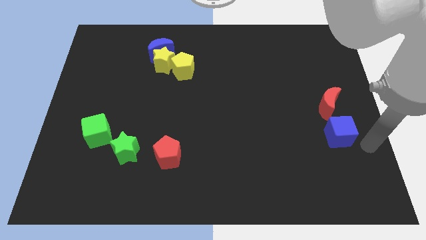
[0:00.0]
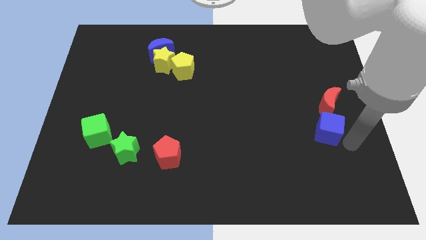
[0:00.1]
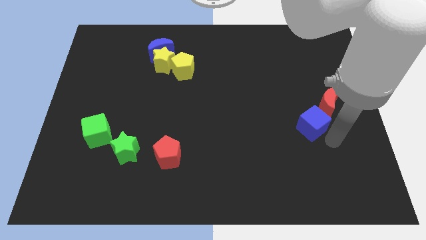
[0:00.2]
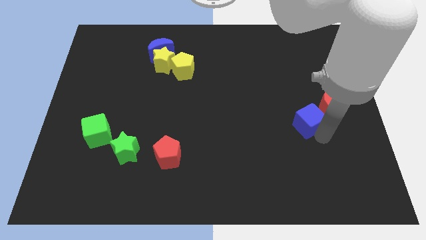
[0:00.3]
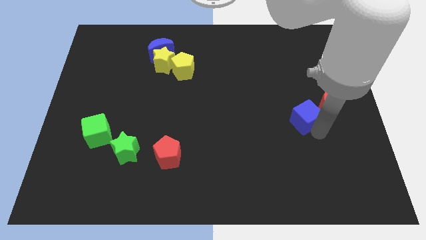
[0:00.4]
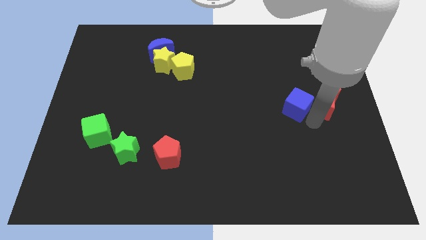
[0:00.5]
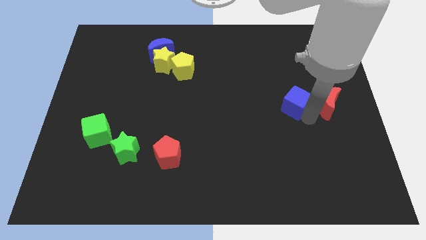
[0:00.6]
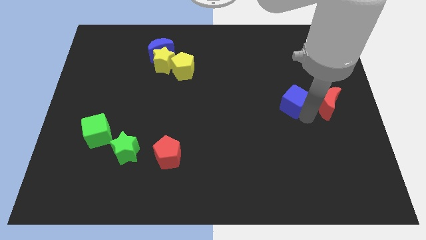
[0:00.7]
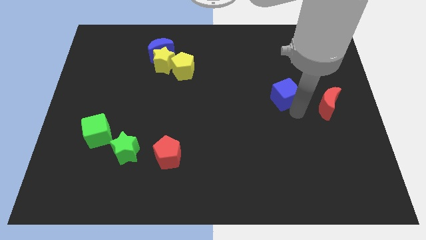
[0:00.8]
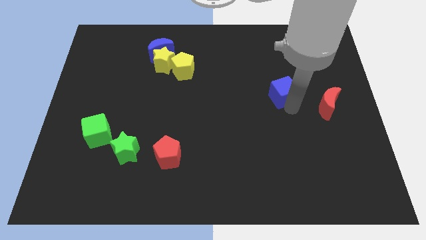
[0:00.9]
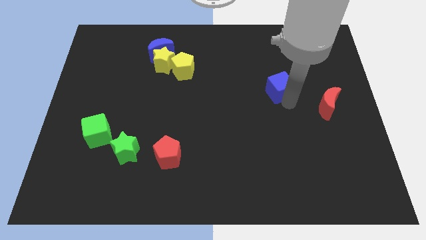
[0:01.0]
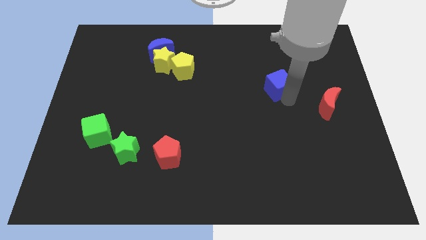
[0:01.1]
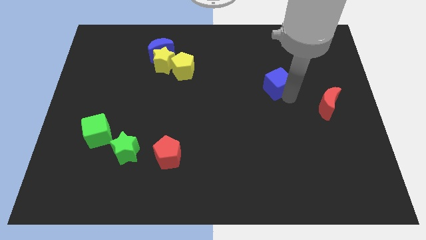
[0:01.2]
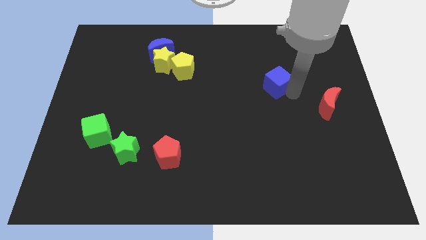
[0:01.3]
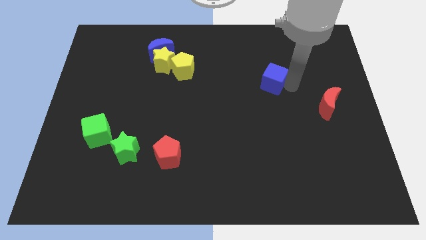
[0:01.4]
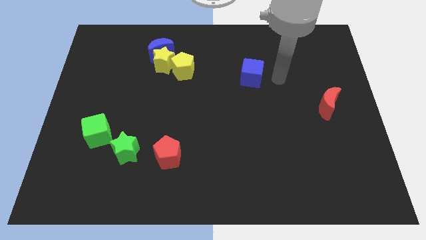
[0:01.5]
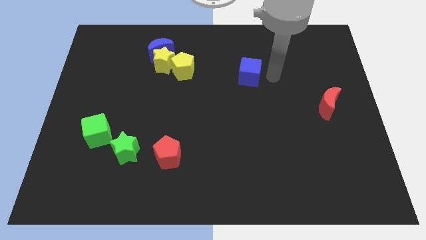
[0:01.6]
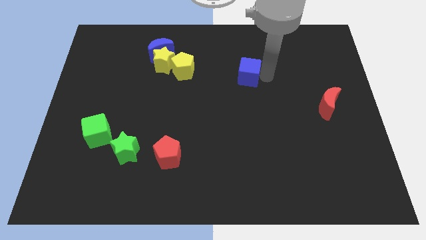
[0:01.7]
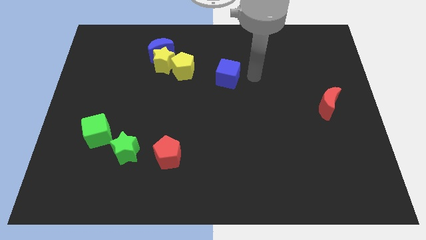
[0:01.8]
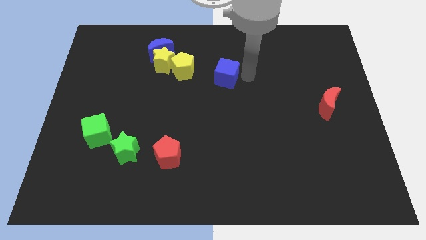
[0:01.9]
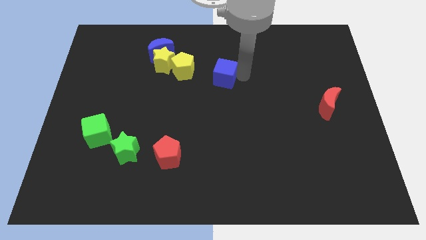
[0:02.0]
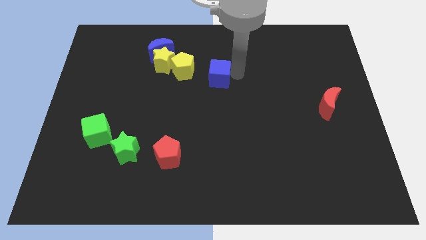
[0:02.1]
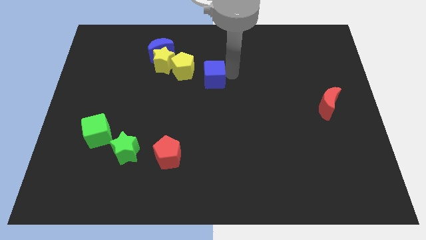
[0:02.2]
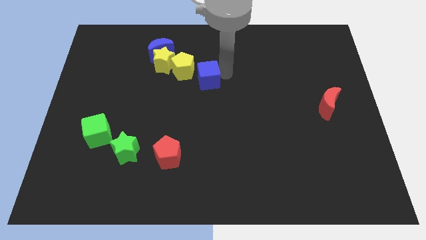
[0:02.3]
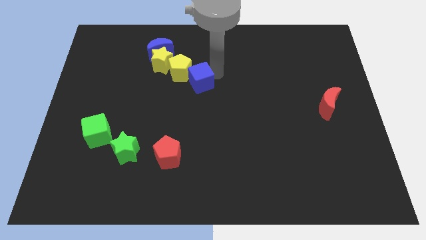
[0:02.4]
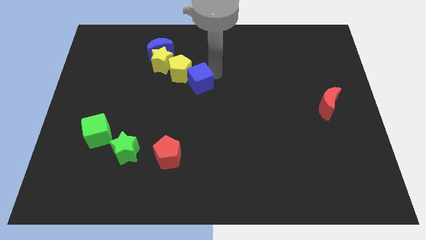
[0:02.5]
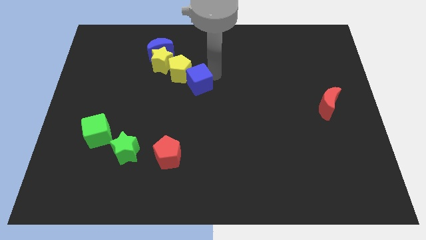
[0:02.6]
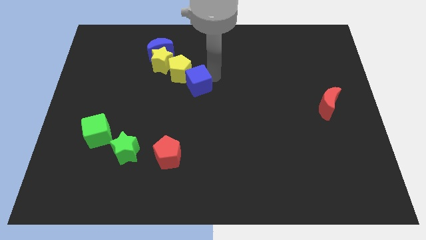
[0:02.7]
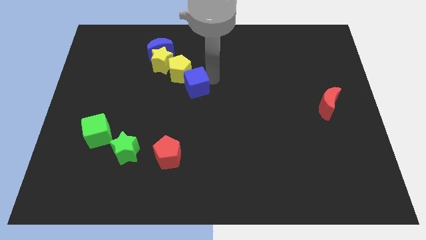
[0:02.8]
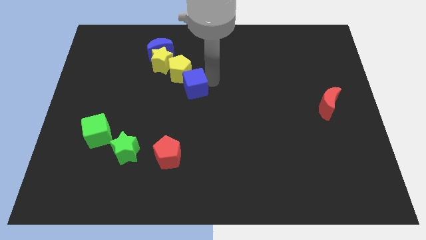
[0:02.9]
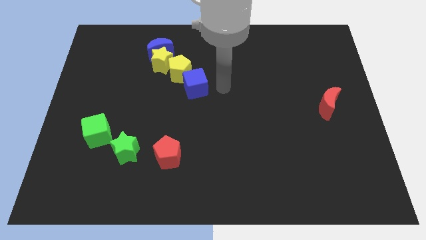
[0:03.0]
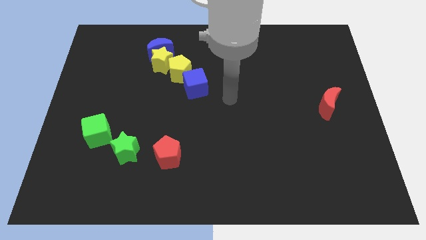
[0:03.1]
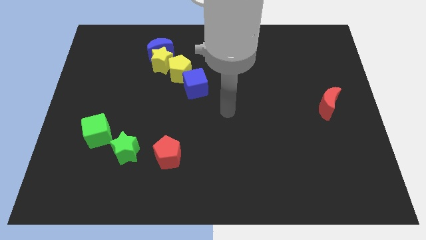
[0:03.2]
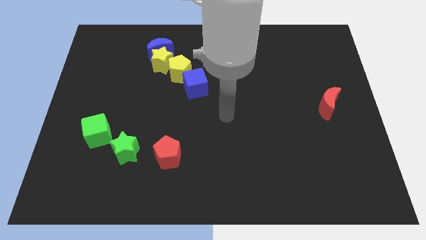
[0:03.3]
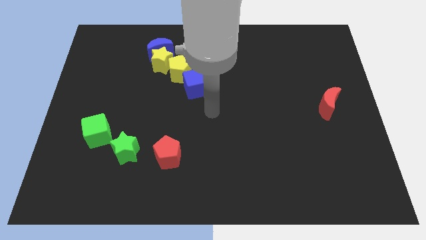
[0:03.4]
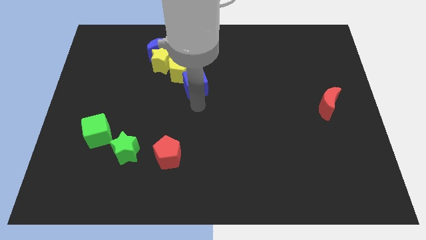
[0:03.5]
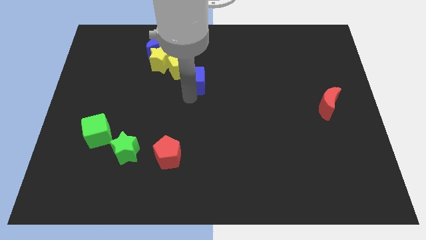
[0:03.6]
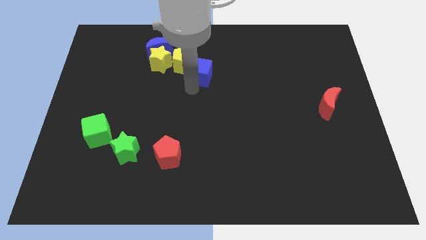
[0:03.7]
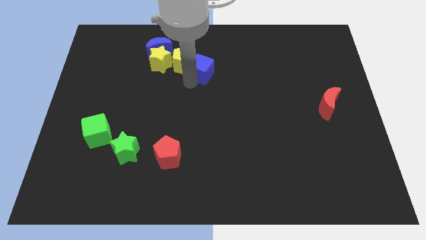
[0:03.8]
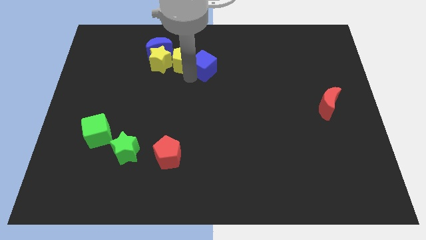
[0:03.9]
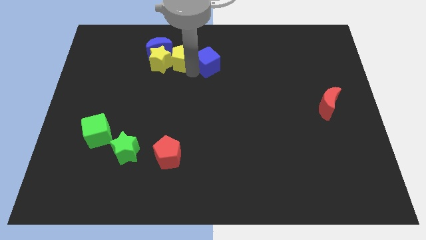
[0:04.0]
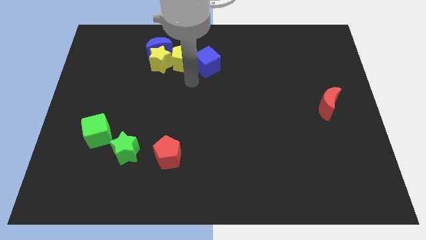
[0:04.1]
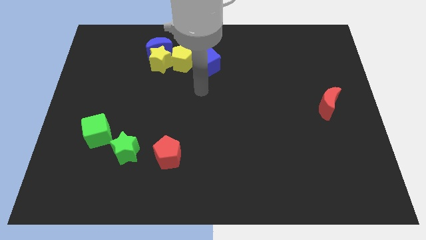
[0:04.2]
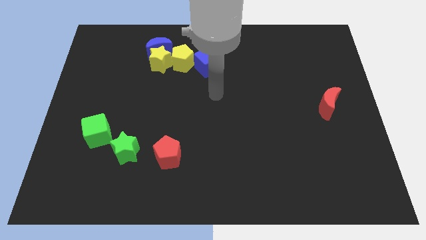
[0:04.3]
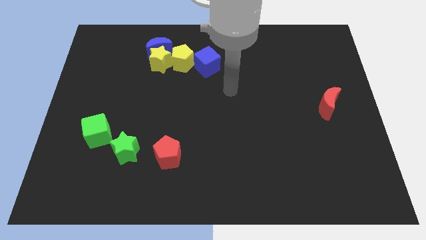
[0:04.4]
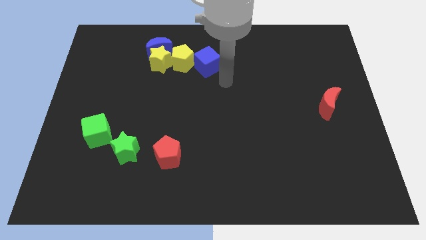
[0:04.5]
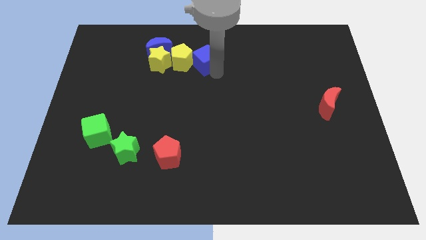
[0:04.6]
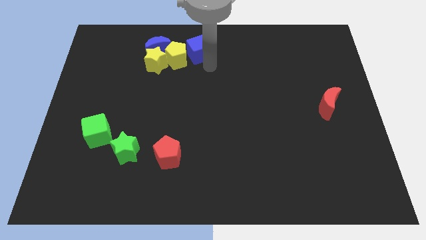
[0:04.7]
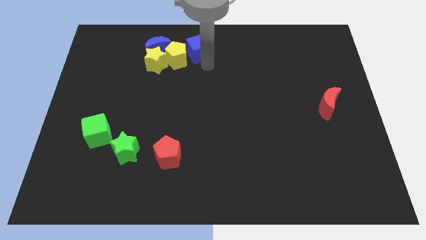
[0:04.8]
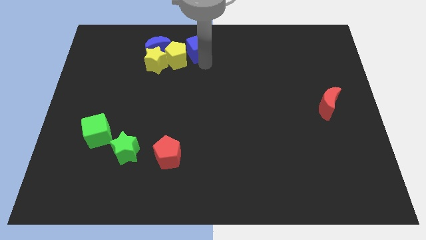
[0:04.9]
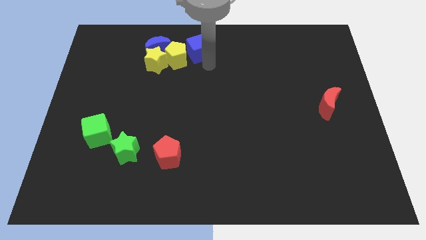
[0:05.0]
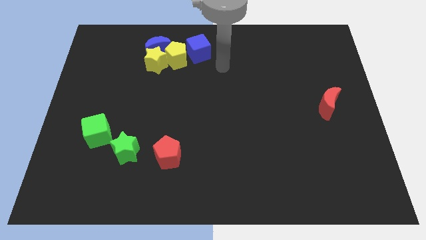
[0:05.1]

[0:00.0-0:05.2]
push the blue cube right to the yellow pentagon

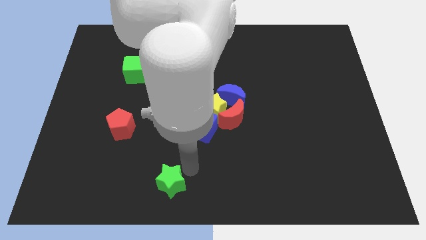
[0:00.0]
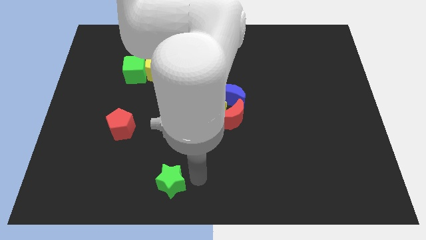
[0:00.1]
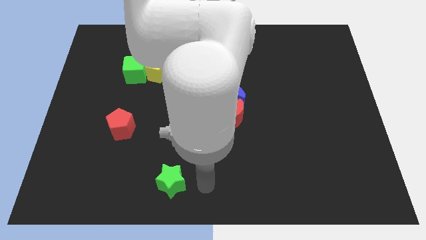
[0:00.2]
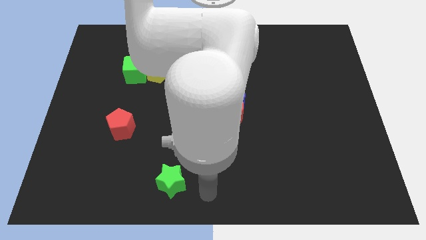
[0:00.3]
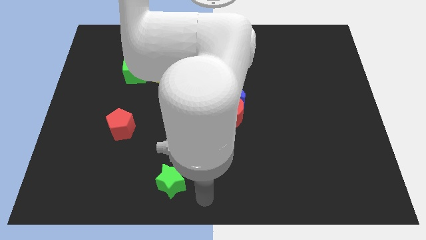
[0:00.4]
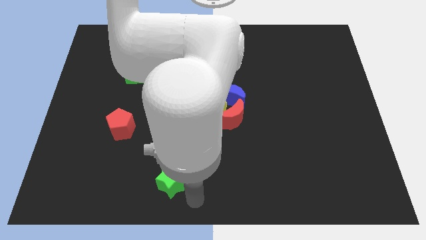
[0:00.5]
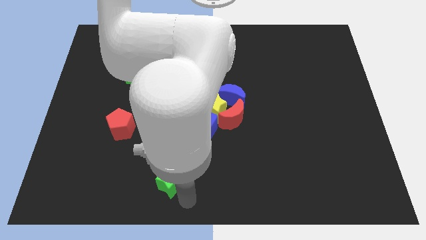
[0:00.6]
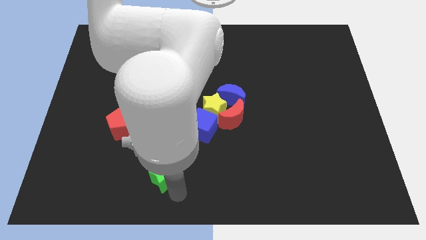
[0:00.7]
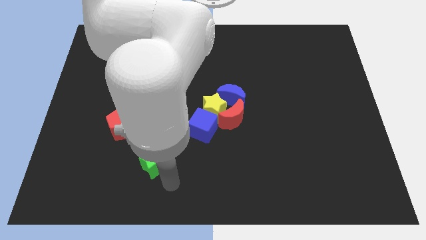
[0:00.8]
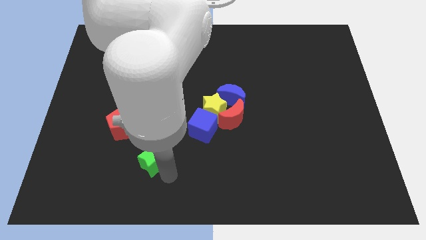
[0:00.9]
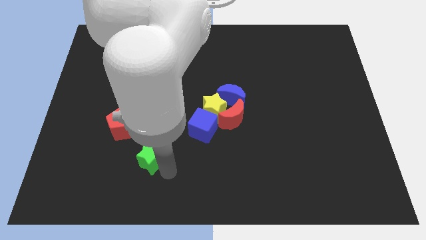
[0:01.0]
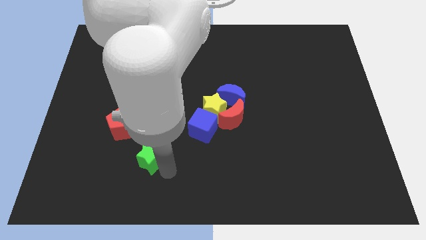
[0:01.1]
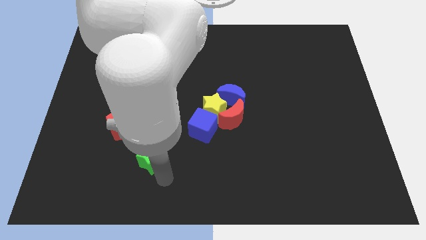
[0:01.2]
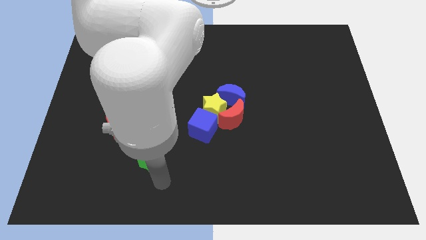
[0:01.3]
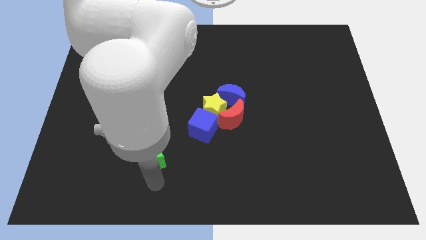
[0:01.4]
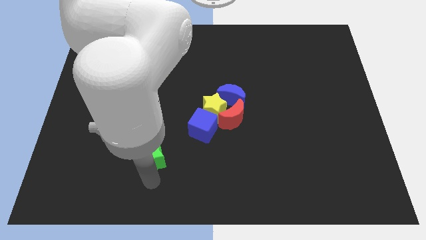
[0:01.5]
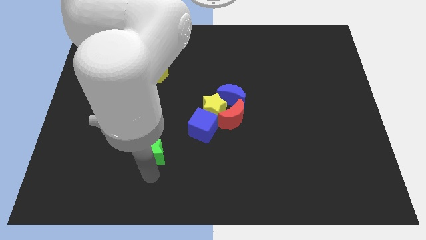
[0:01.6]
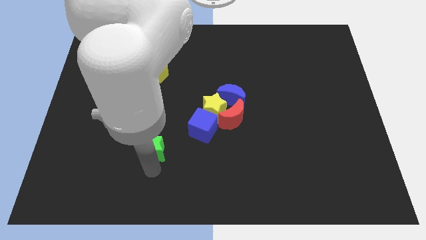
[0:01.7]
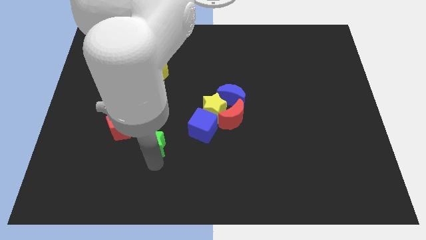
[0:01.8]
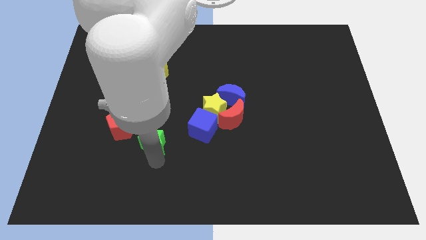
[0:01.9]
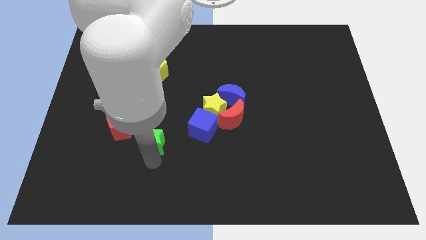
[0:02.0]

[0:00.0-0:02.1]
place the green star near to the red pentagon

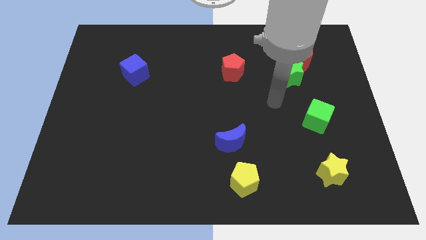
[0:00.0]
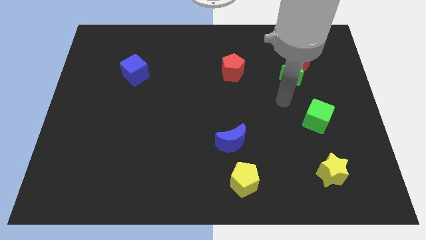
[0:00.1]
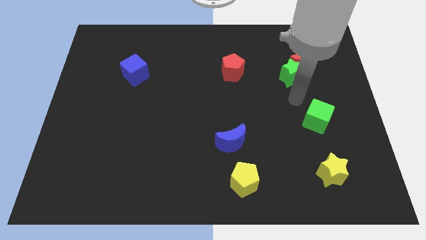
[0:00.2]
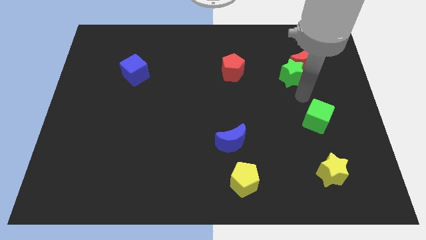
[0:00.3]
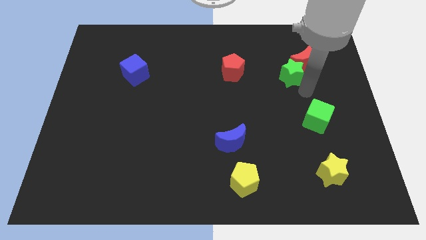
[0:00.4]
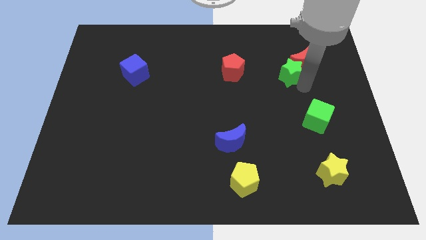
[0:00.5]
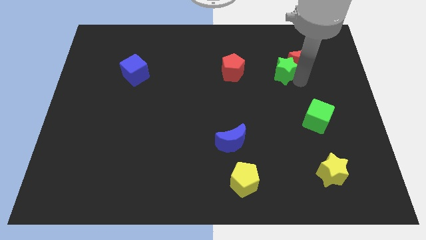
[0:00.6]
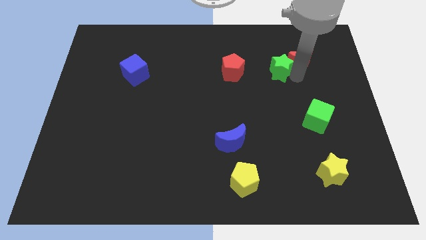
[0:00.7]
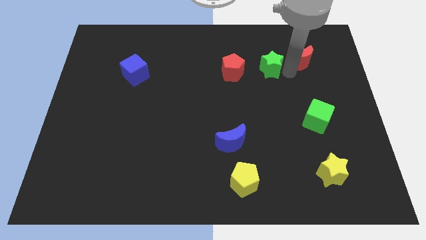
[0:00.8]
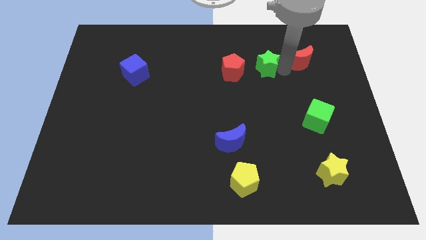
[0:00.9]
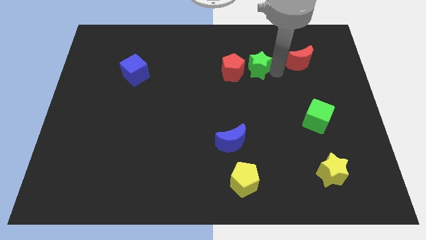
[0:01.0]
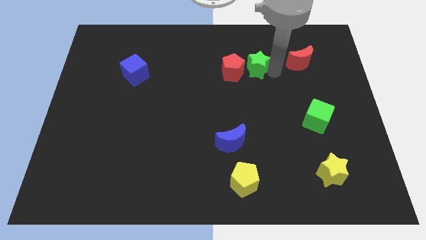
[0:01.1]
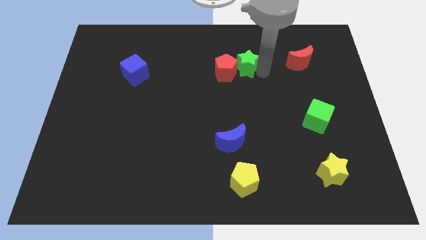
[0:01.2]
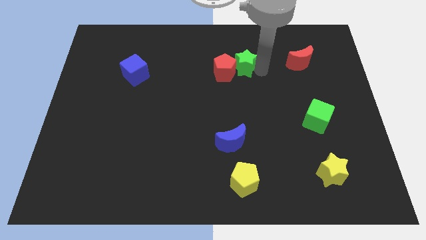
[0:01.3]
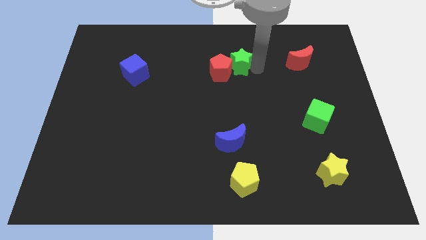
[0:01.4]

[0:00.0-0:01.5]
move the green star into the red pentagon

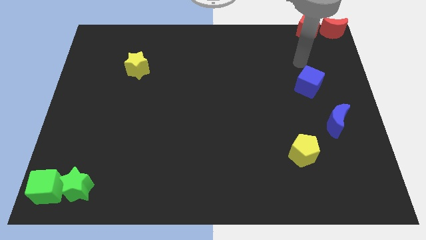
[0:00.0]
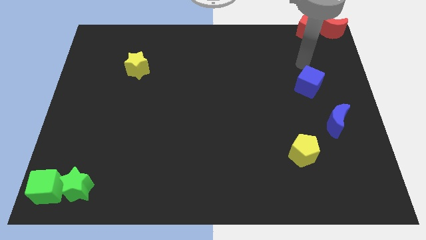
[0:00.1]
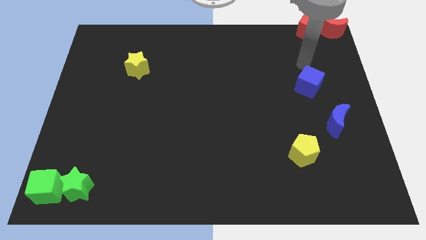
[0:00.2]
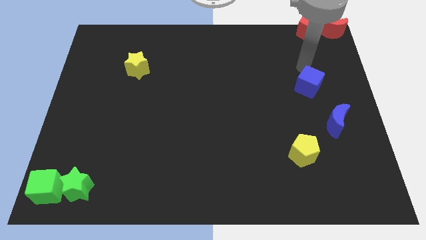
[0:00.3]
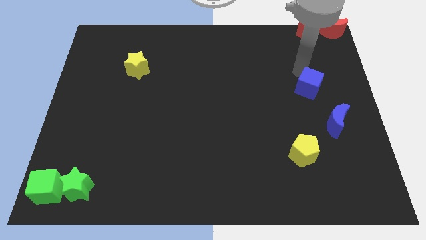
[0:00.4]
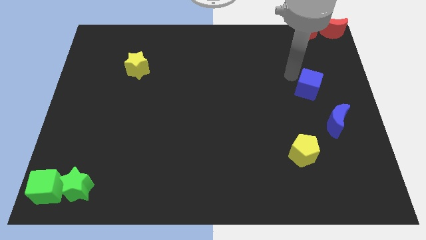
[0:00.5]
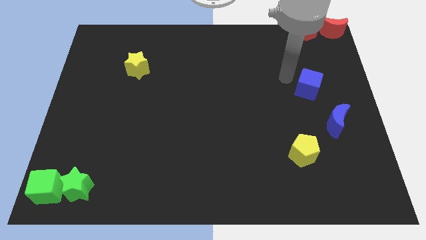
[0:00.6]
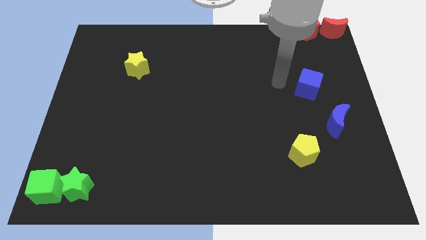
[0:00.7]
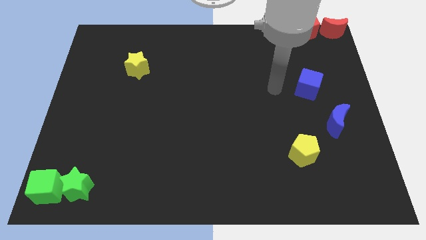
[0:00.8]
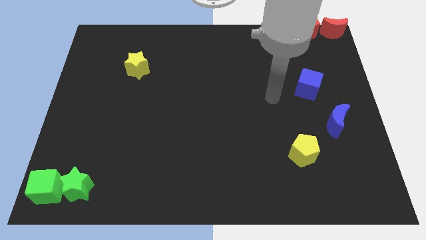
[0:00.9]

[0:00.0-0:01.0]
push the blue cube slightly towards the right center of the board
